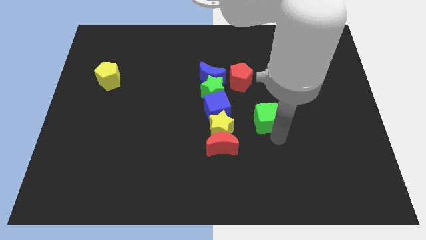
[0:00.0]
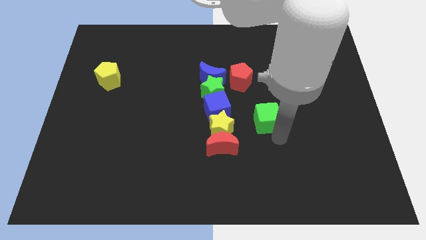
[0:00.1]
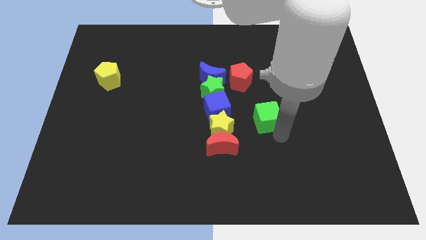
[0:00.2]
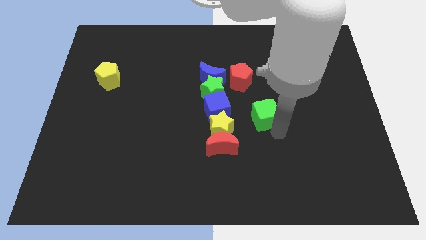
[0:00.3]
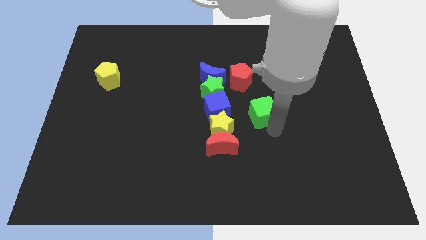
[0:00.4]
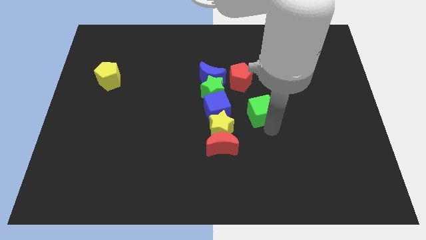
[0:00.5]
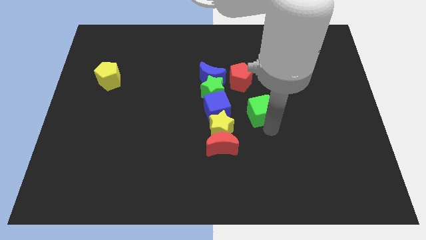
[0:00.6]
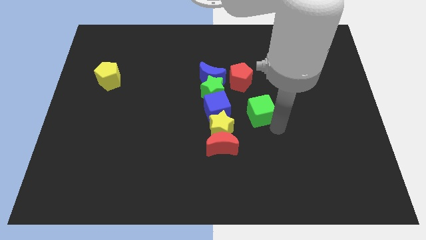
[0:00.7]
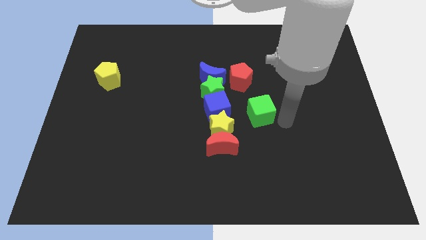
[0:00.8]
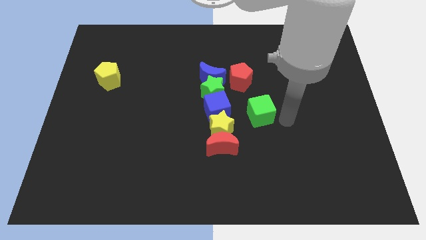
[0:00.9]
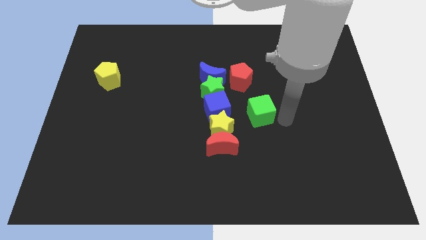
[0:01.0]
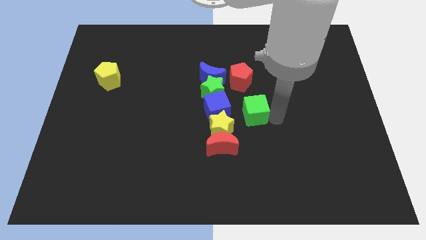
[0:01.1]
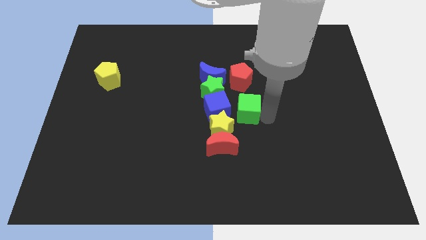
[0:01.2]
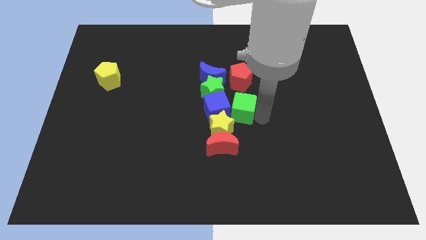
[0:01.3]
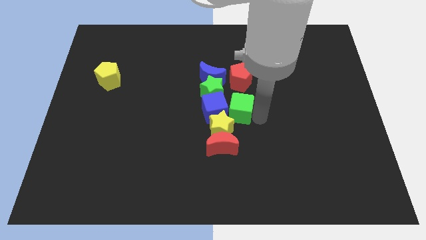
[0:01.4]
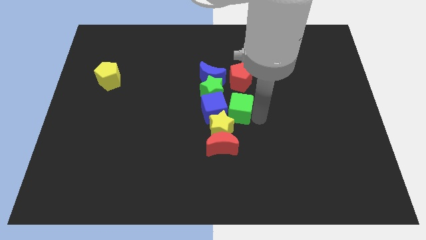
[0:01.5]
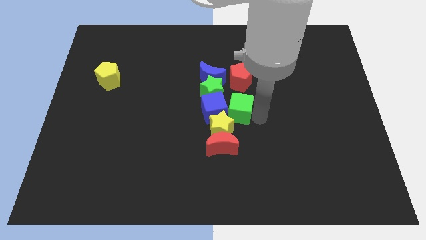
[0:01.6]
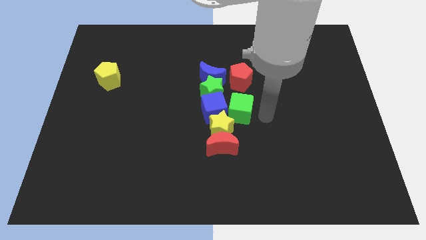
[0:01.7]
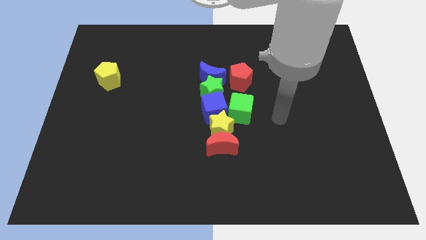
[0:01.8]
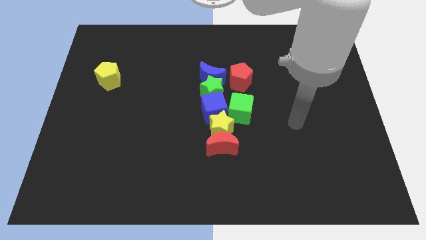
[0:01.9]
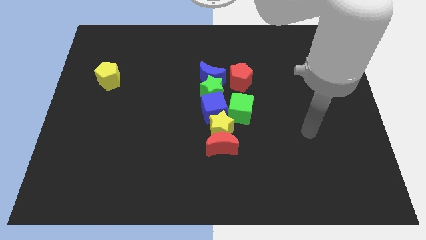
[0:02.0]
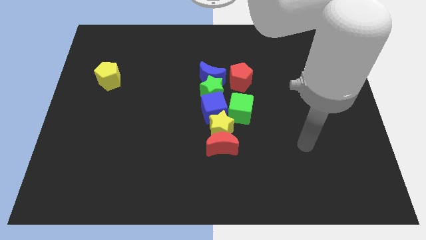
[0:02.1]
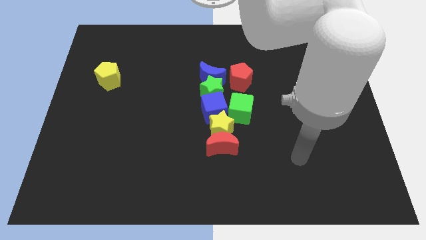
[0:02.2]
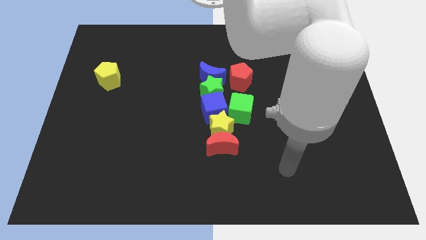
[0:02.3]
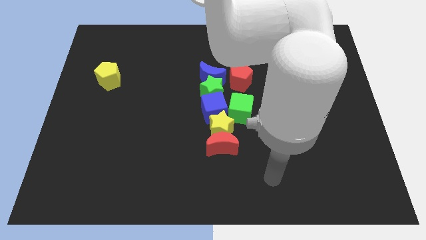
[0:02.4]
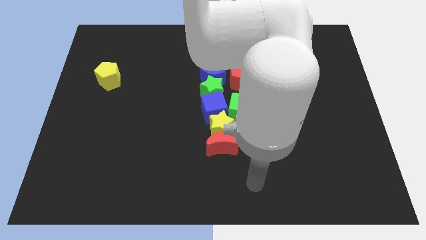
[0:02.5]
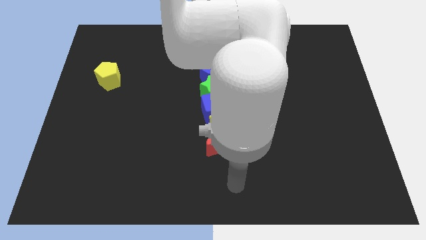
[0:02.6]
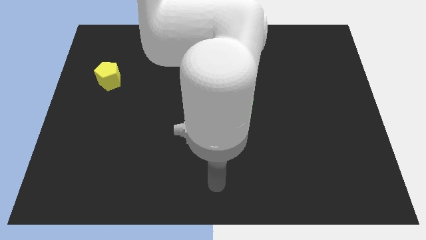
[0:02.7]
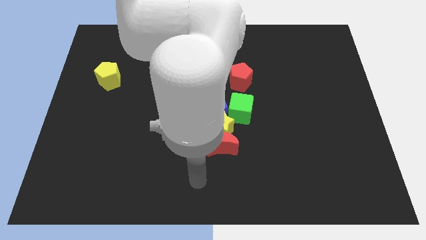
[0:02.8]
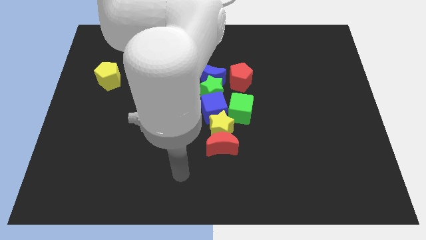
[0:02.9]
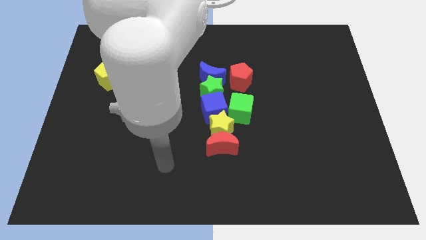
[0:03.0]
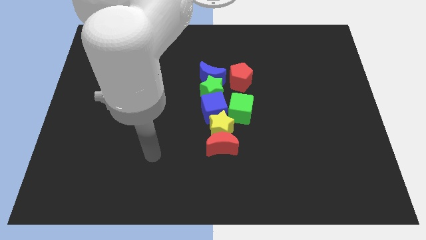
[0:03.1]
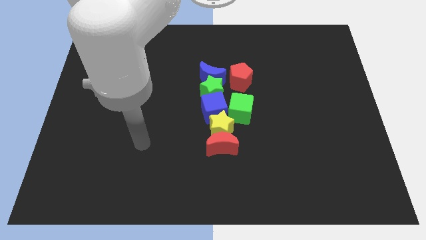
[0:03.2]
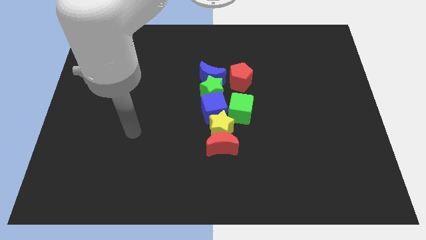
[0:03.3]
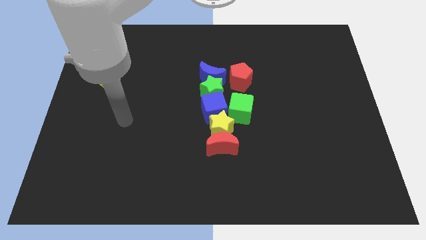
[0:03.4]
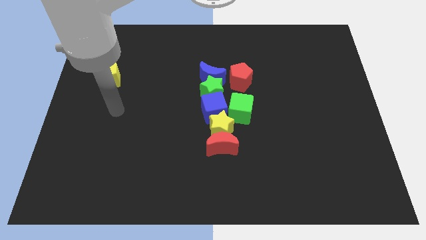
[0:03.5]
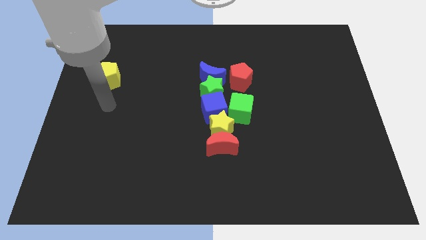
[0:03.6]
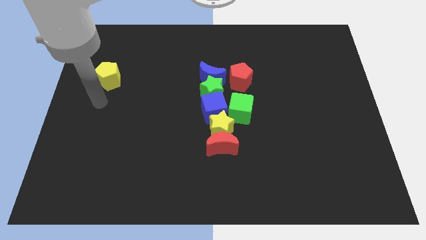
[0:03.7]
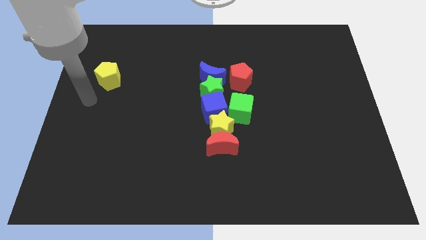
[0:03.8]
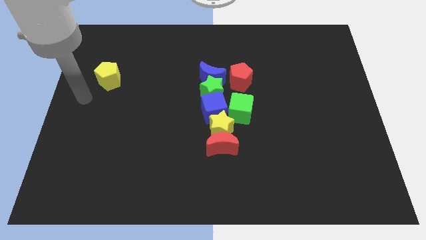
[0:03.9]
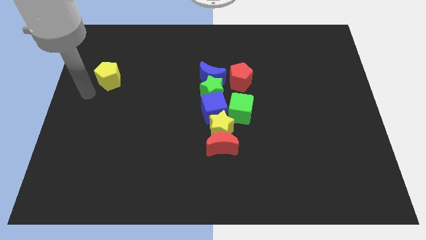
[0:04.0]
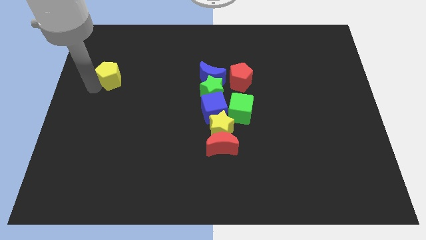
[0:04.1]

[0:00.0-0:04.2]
move the arm to the right of the yellow pentagon

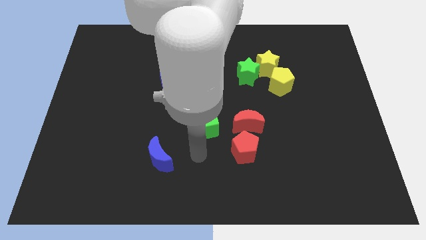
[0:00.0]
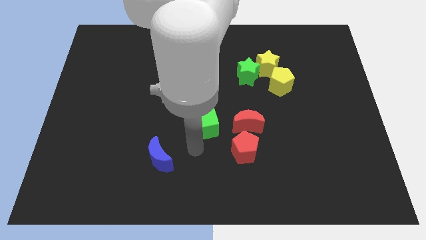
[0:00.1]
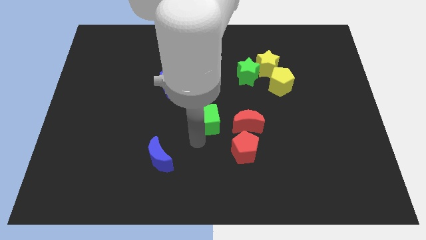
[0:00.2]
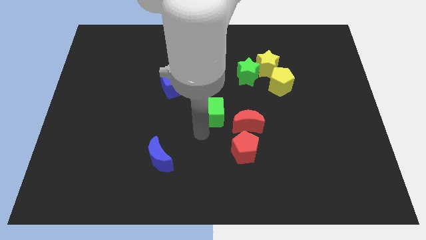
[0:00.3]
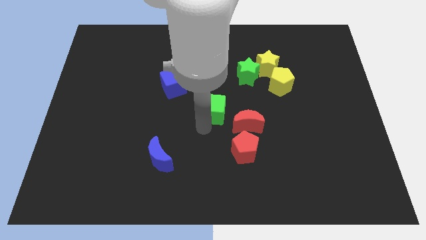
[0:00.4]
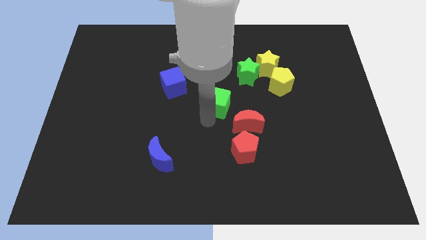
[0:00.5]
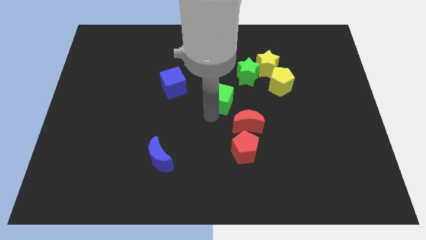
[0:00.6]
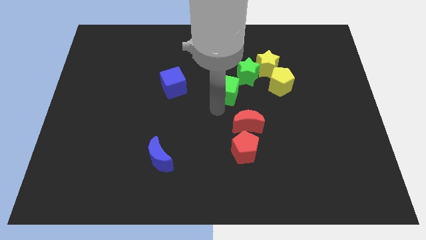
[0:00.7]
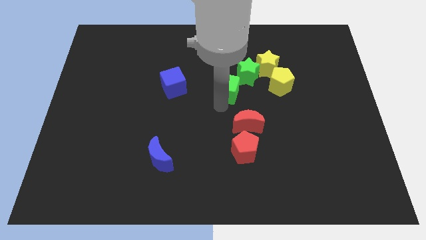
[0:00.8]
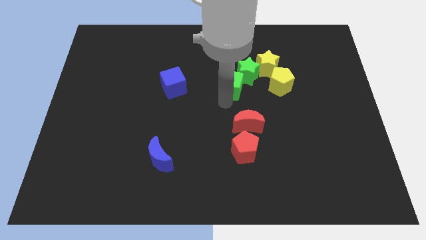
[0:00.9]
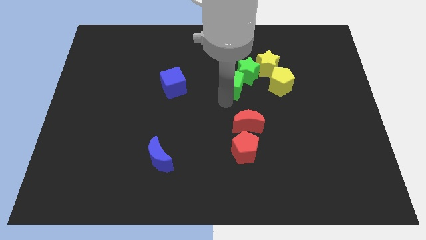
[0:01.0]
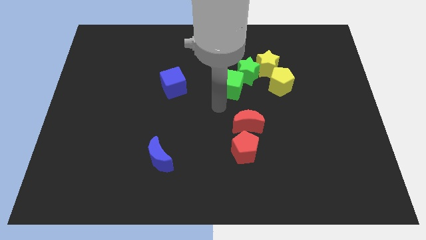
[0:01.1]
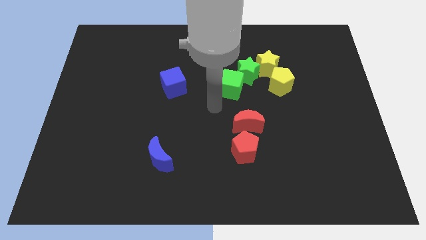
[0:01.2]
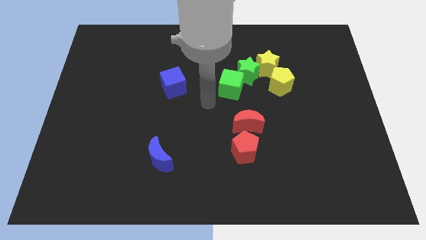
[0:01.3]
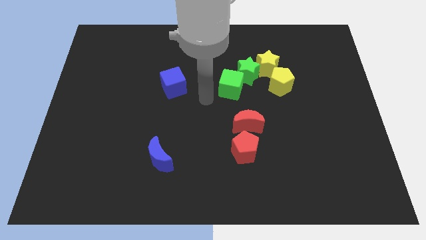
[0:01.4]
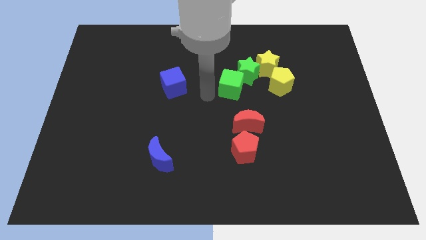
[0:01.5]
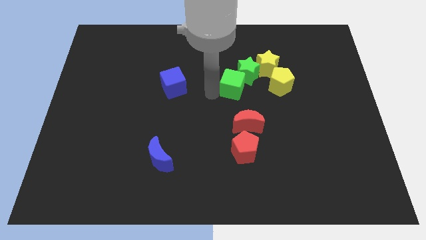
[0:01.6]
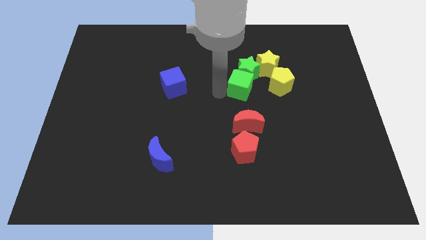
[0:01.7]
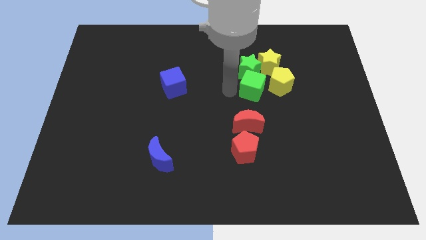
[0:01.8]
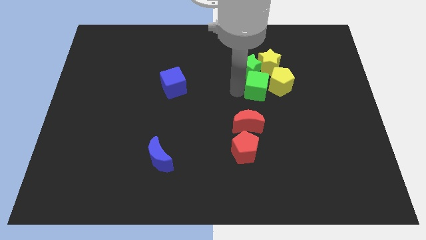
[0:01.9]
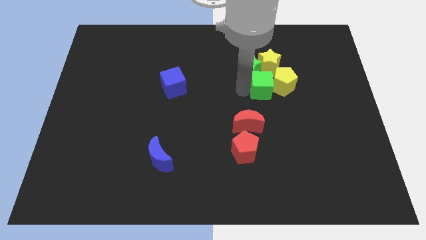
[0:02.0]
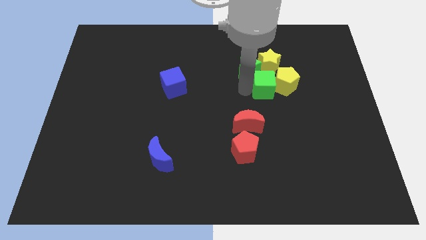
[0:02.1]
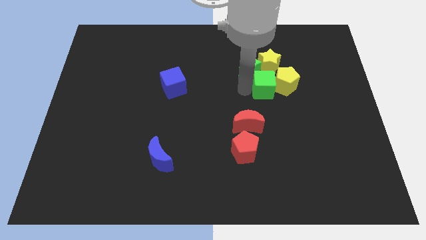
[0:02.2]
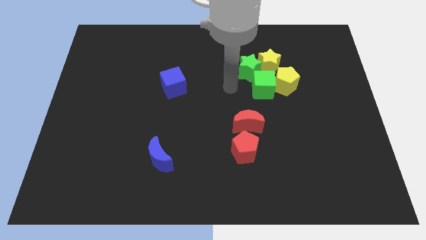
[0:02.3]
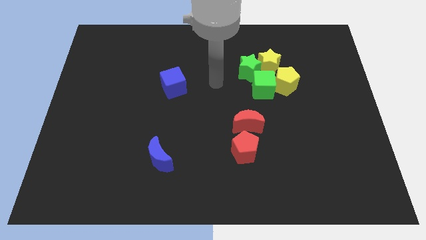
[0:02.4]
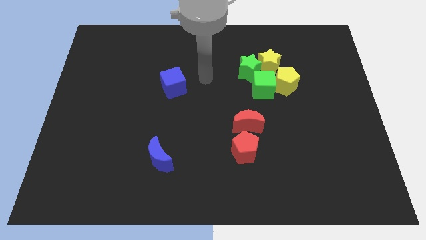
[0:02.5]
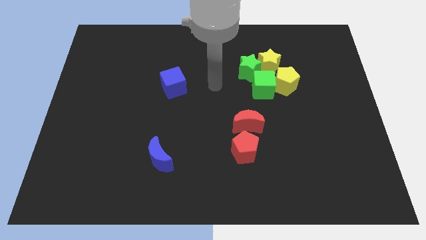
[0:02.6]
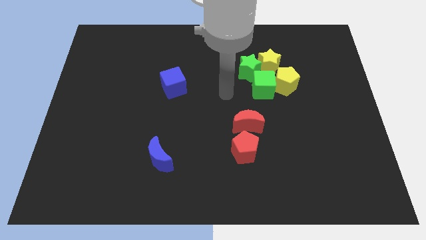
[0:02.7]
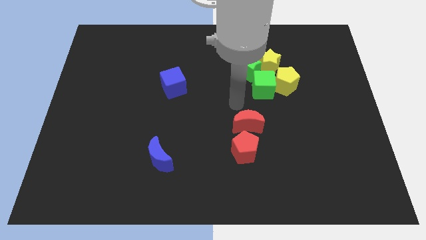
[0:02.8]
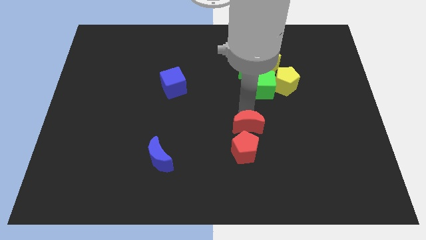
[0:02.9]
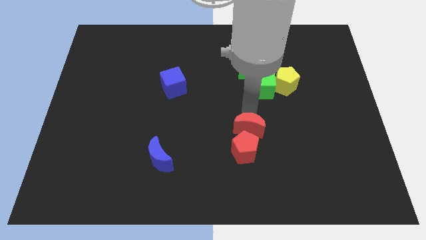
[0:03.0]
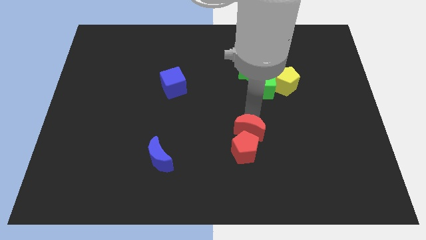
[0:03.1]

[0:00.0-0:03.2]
place the green cube vertically below the yellow star

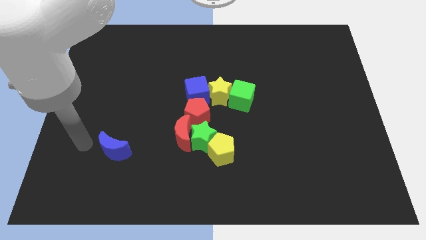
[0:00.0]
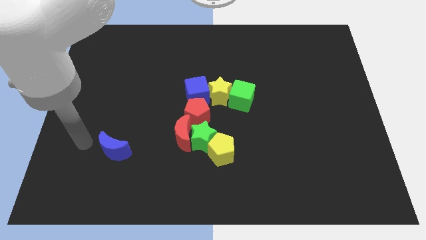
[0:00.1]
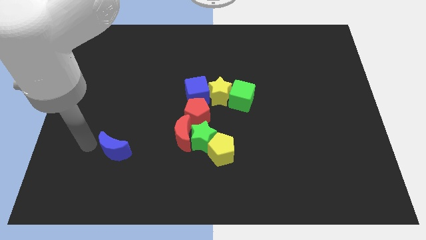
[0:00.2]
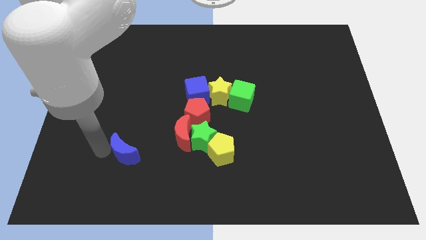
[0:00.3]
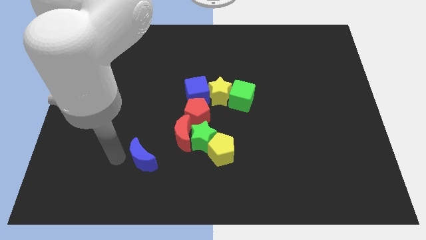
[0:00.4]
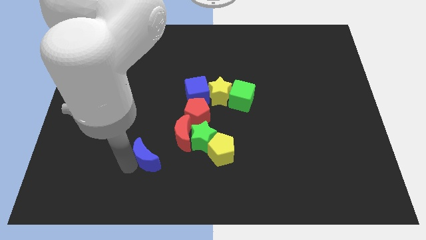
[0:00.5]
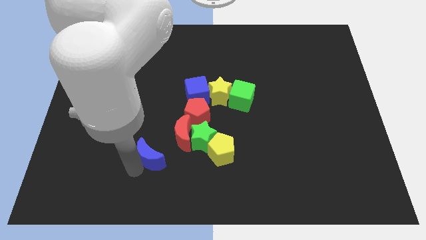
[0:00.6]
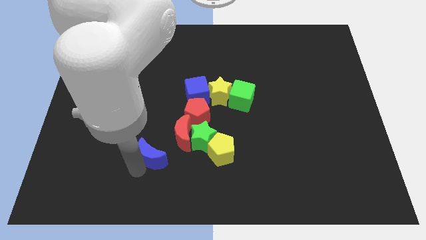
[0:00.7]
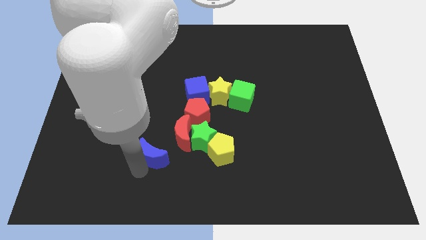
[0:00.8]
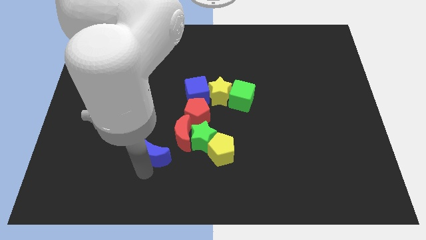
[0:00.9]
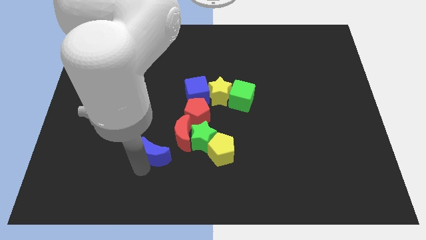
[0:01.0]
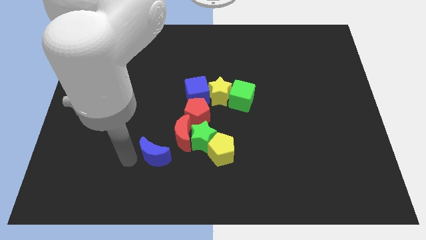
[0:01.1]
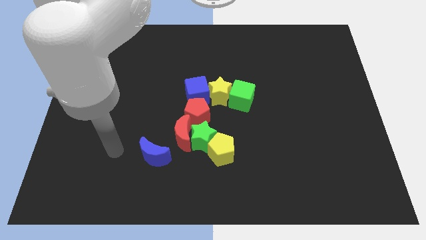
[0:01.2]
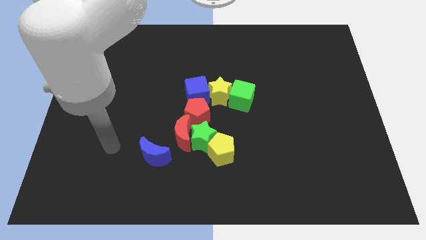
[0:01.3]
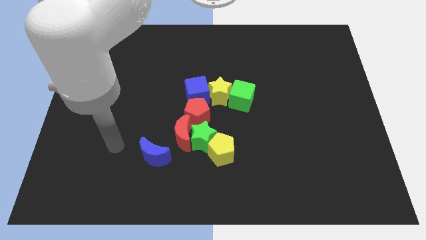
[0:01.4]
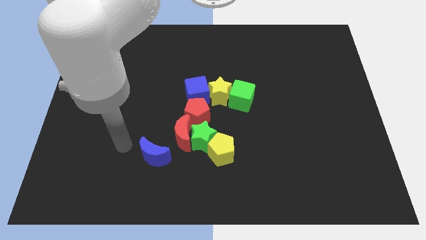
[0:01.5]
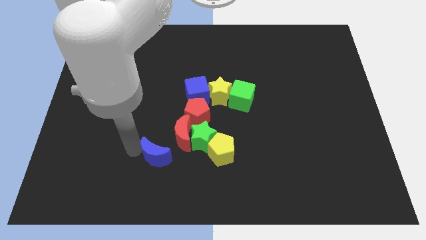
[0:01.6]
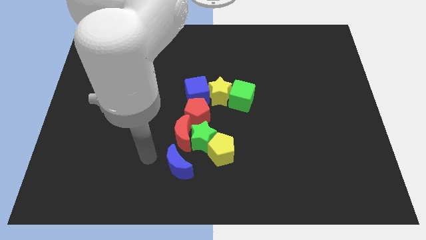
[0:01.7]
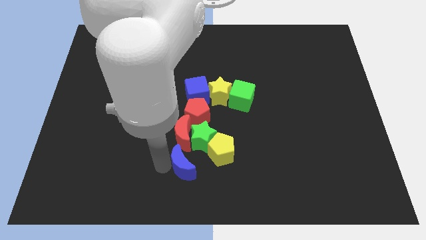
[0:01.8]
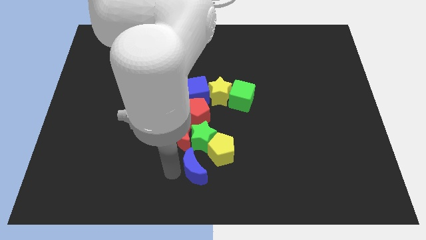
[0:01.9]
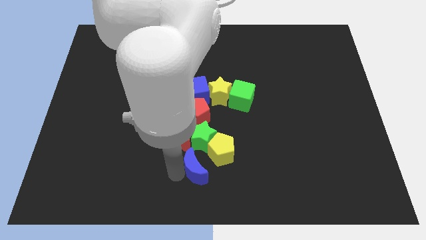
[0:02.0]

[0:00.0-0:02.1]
push the blue crescent to the left of the yellow pentagon
